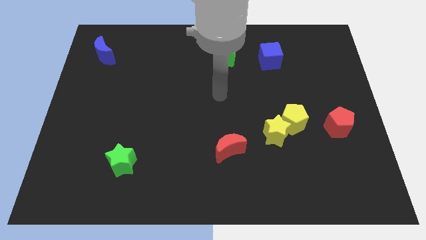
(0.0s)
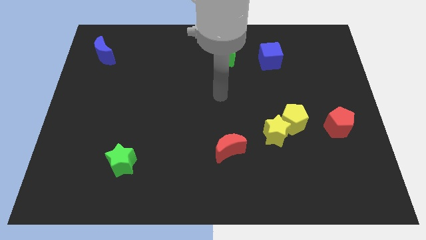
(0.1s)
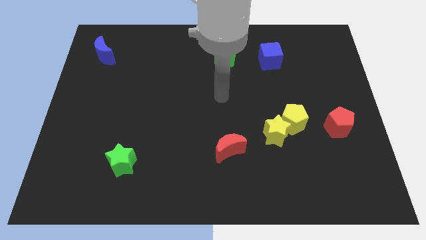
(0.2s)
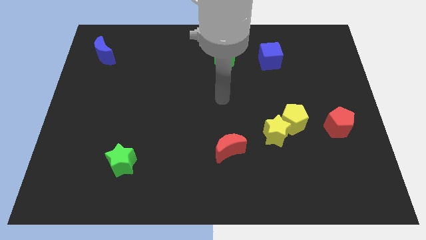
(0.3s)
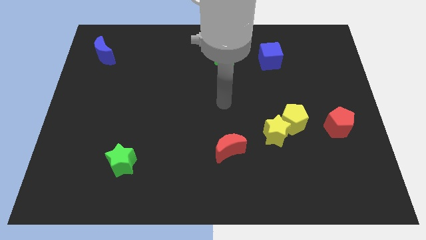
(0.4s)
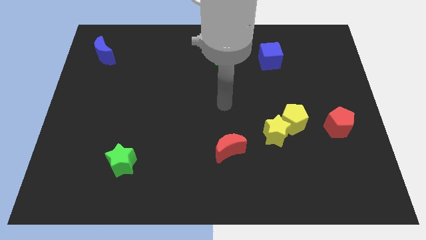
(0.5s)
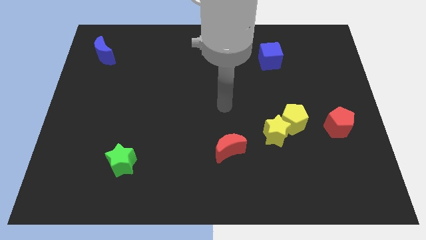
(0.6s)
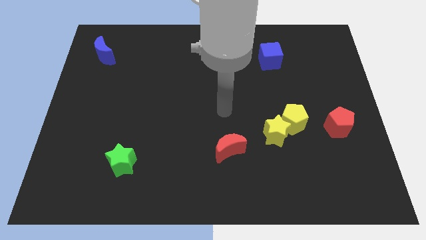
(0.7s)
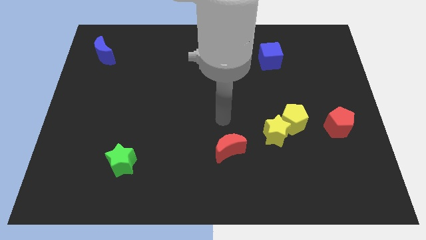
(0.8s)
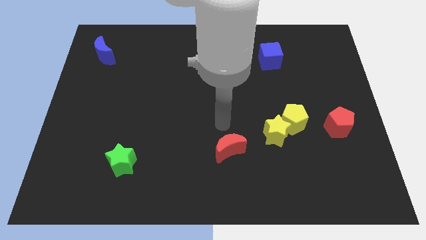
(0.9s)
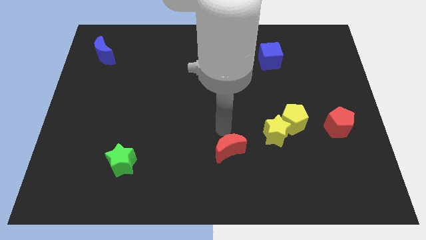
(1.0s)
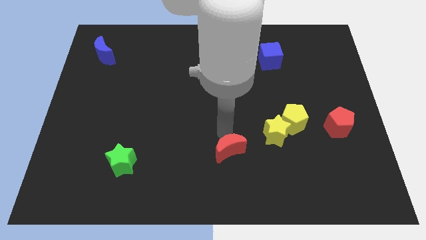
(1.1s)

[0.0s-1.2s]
move your arm towards red crescent

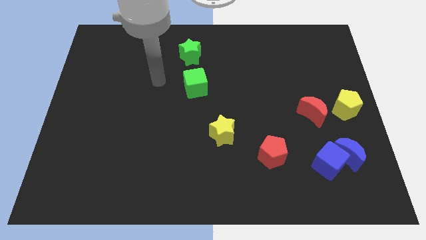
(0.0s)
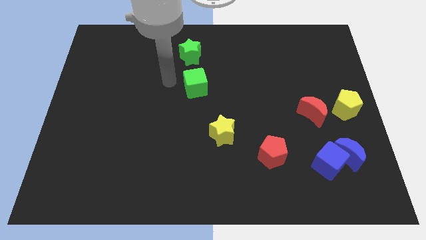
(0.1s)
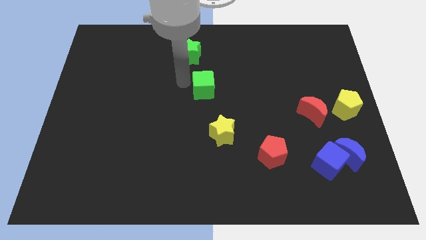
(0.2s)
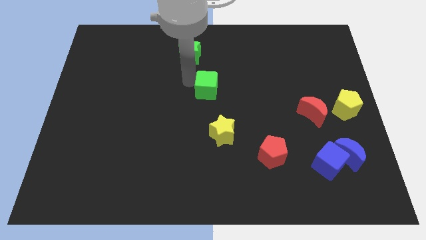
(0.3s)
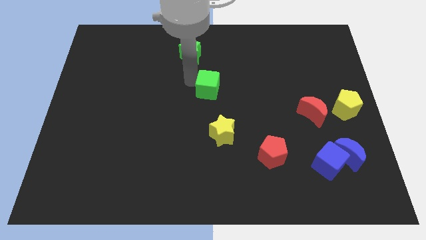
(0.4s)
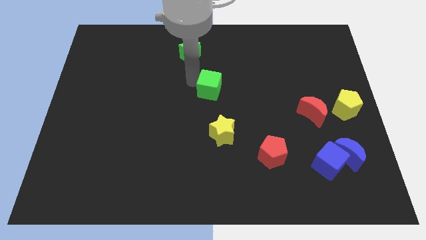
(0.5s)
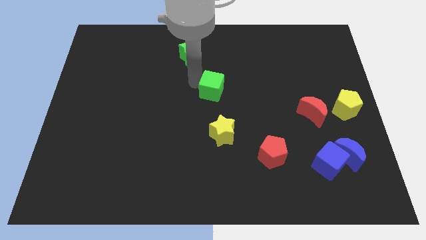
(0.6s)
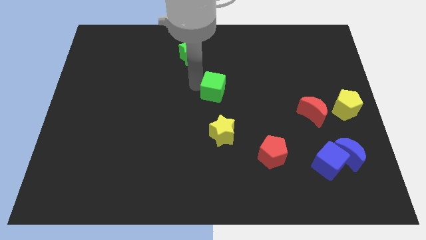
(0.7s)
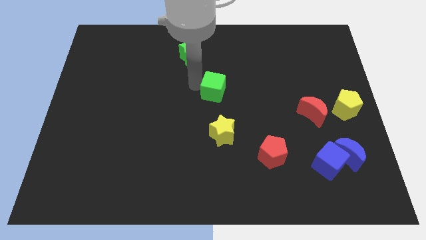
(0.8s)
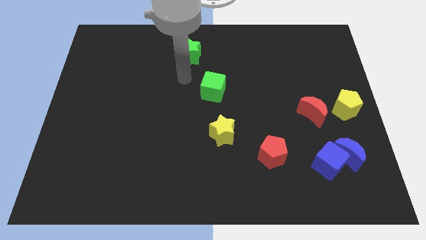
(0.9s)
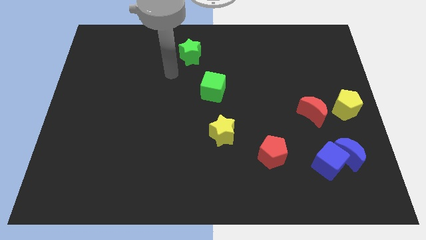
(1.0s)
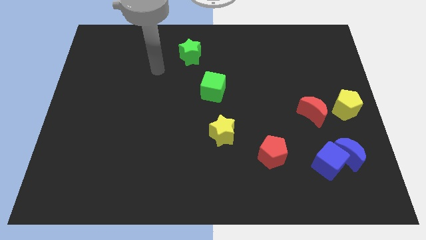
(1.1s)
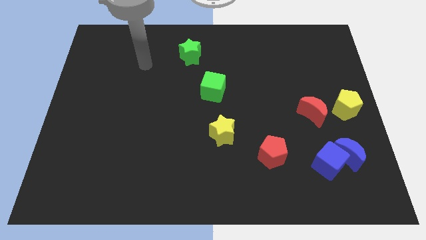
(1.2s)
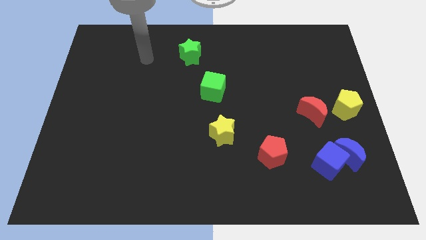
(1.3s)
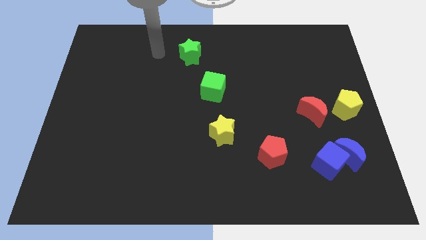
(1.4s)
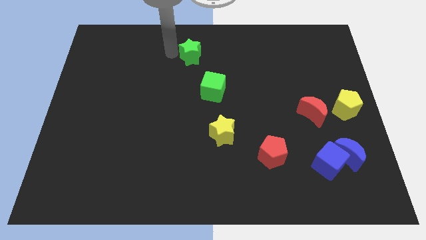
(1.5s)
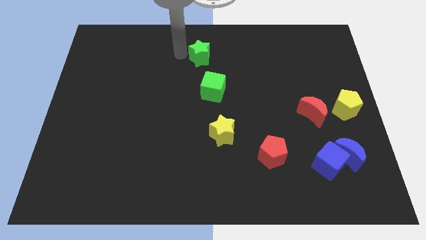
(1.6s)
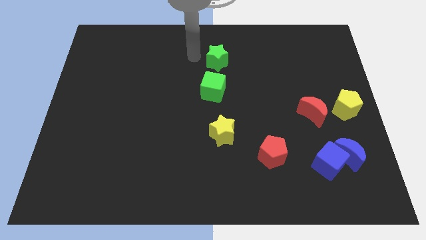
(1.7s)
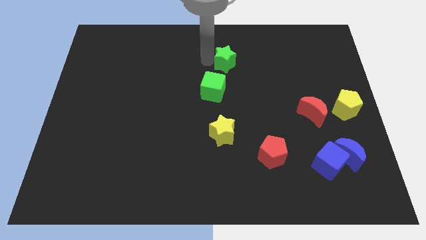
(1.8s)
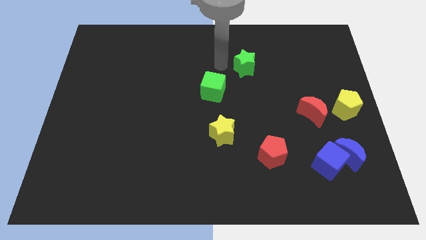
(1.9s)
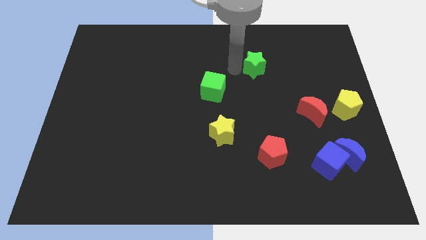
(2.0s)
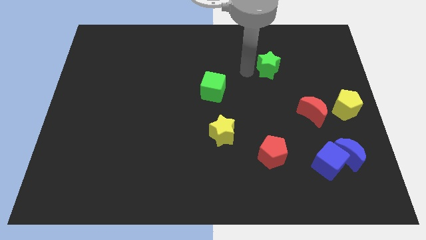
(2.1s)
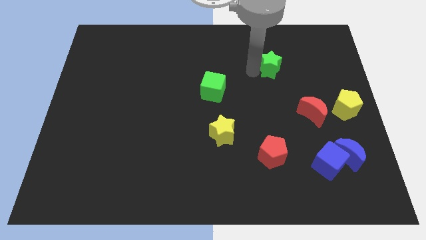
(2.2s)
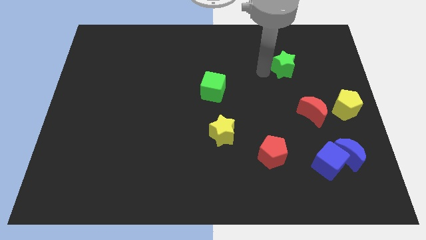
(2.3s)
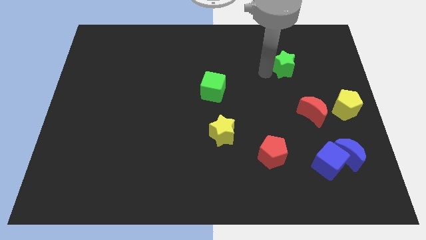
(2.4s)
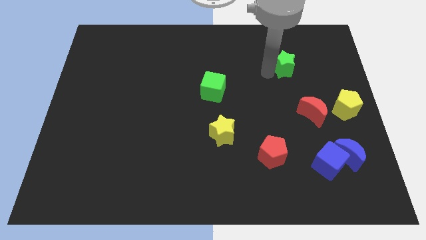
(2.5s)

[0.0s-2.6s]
move the green star towards the right

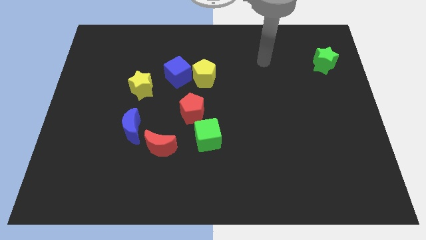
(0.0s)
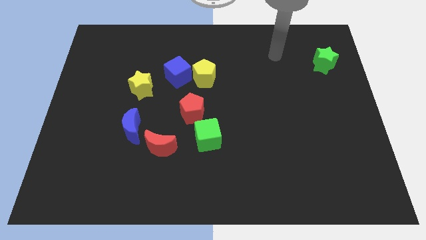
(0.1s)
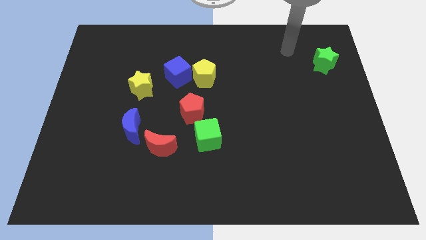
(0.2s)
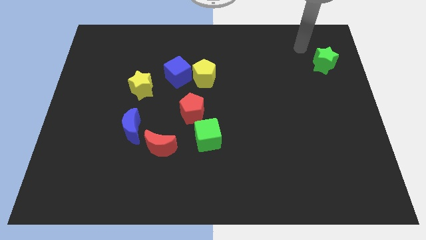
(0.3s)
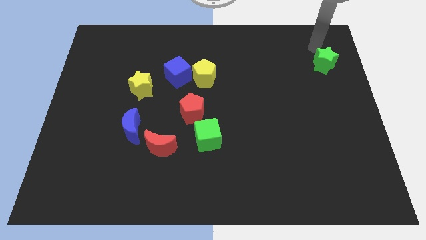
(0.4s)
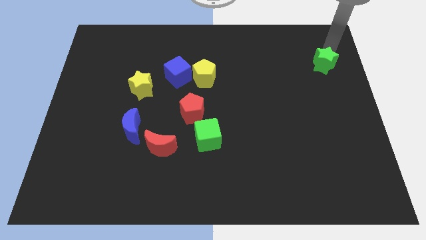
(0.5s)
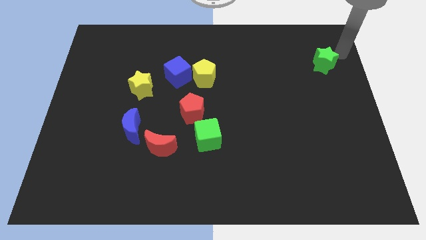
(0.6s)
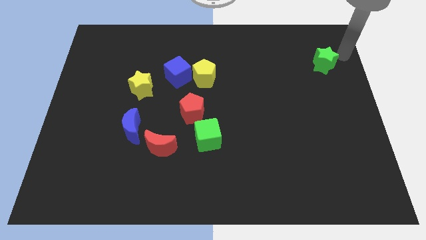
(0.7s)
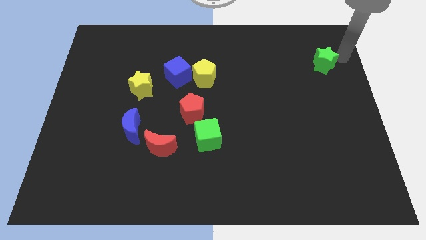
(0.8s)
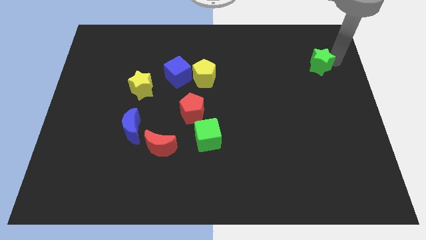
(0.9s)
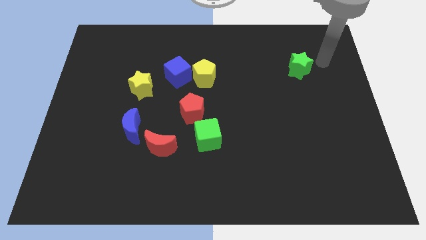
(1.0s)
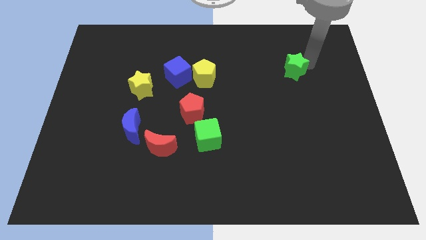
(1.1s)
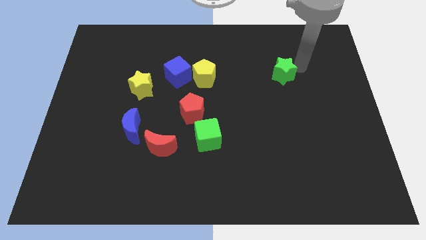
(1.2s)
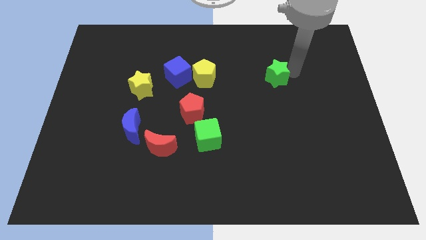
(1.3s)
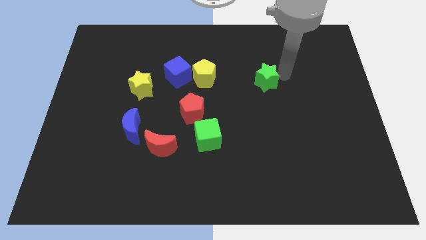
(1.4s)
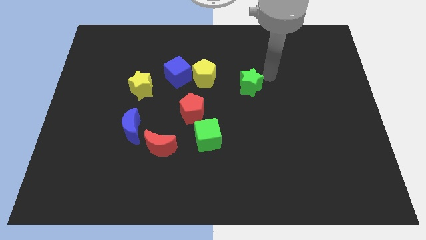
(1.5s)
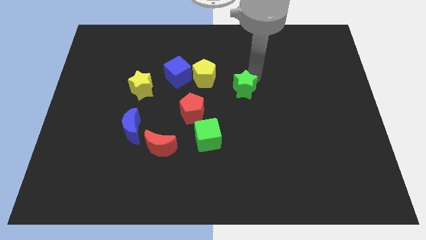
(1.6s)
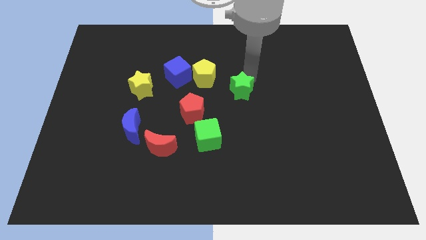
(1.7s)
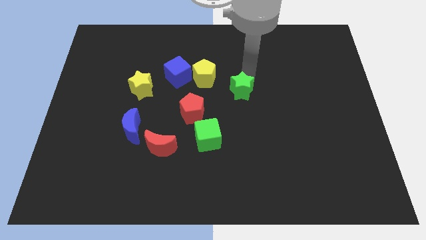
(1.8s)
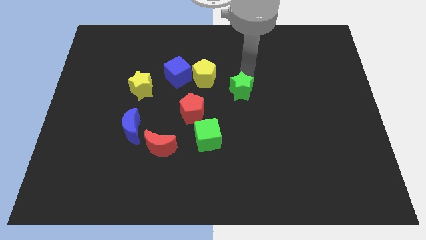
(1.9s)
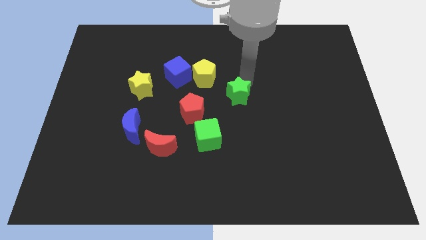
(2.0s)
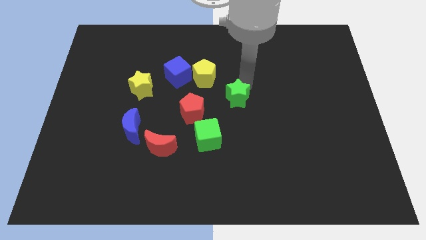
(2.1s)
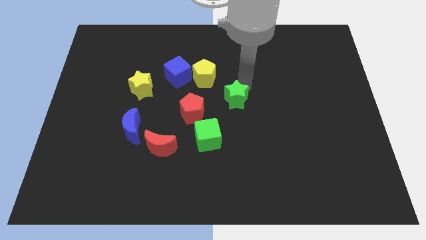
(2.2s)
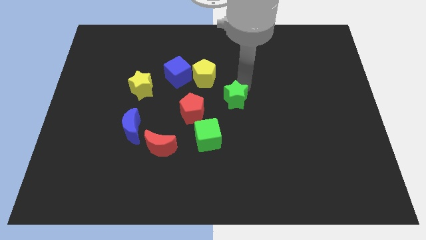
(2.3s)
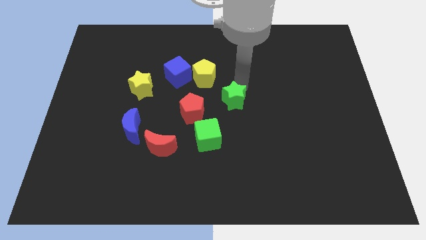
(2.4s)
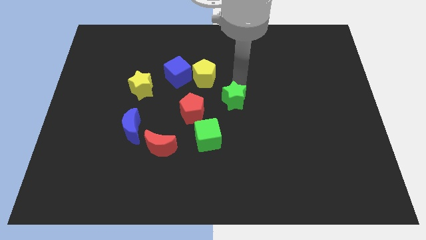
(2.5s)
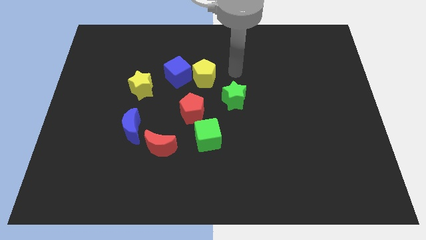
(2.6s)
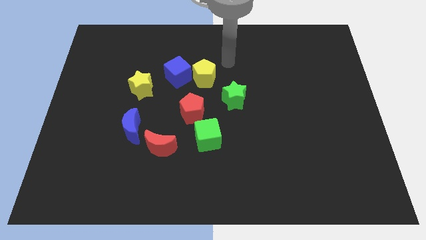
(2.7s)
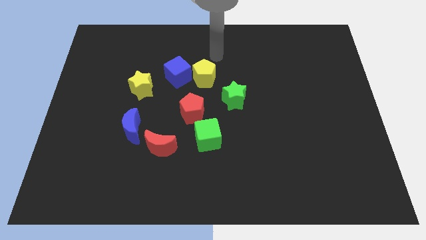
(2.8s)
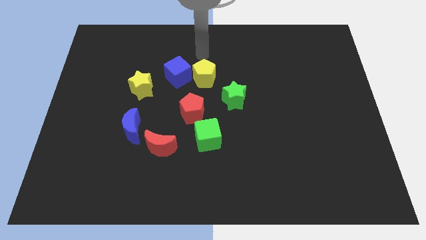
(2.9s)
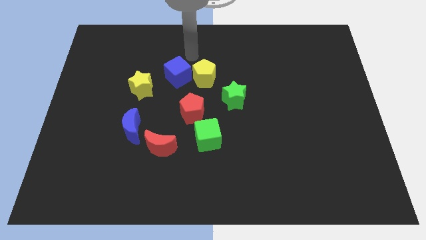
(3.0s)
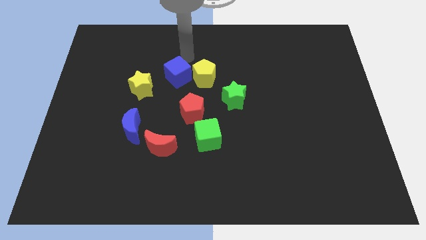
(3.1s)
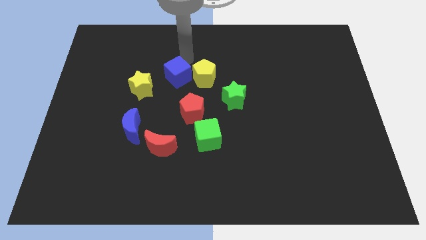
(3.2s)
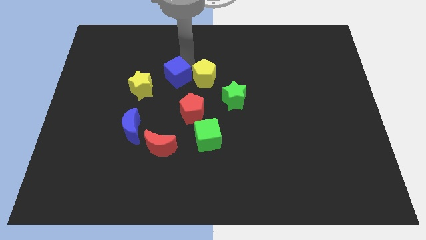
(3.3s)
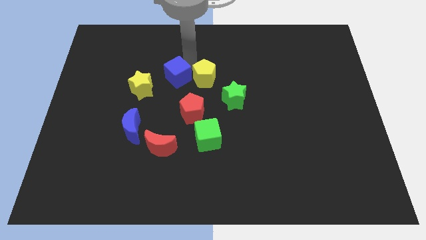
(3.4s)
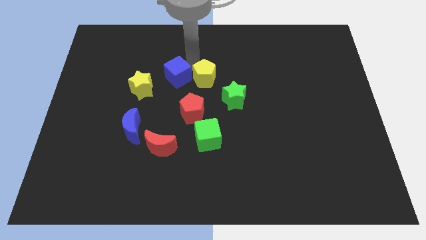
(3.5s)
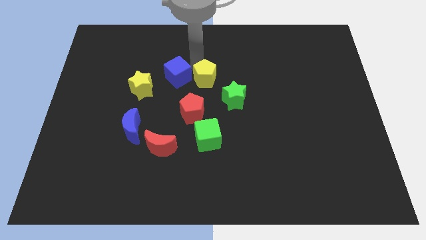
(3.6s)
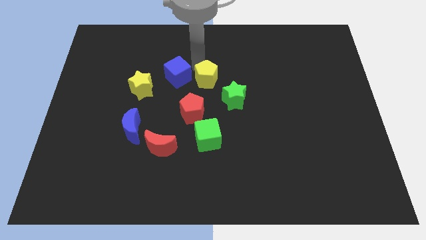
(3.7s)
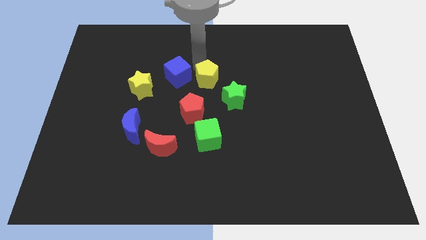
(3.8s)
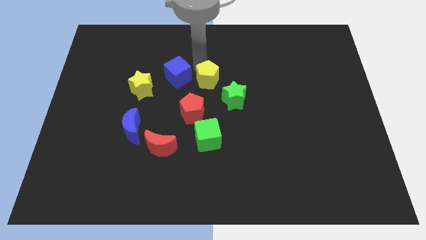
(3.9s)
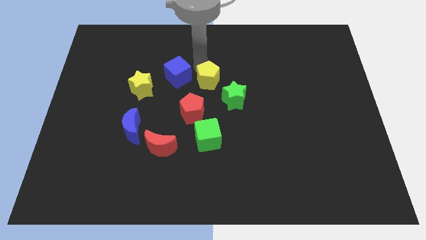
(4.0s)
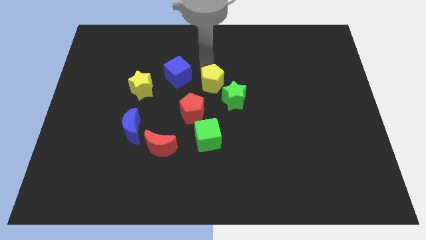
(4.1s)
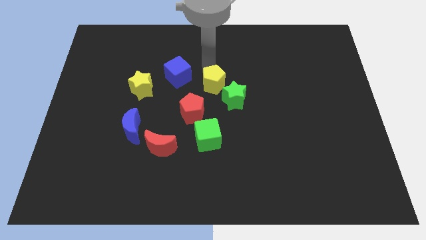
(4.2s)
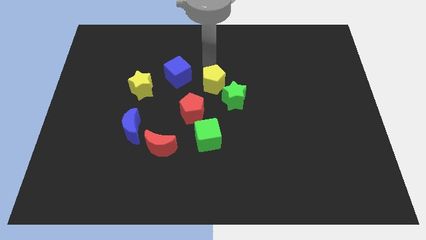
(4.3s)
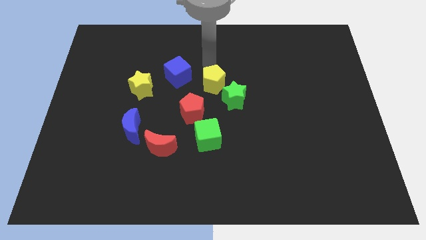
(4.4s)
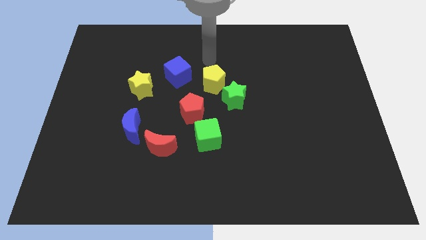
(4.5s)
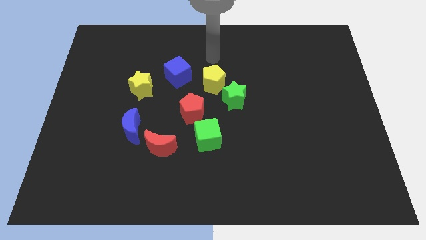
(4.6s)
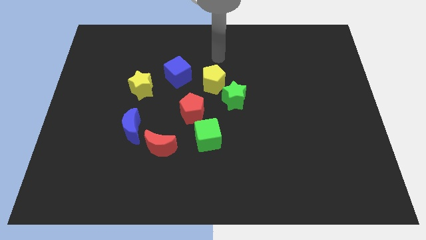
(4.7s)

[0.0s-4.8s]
move the green star and the yellow pentagon close to each other

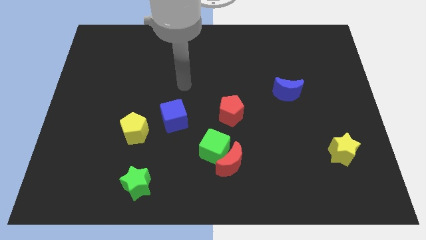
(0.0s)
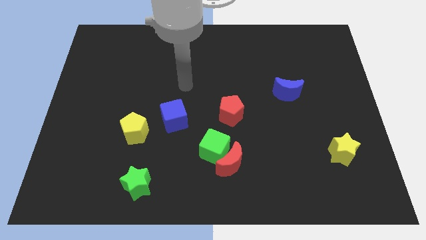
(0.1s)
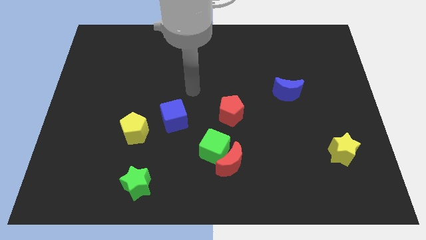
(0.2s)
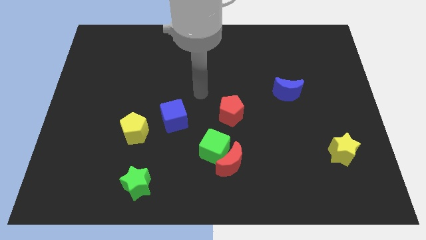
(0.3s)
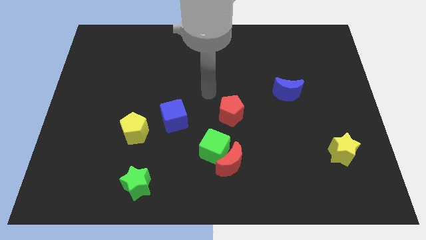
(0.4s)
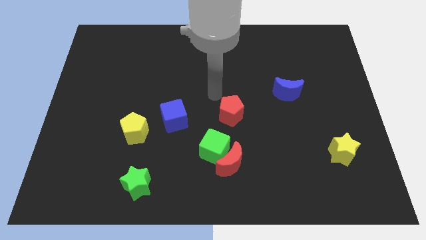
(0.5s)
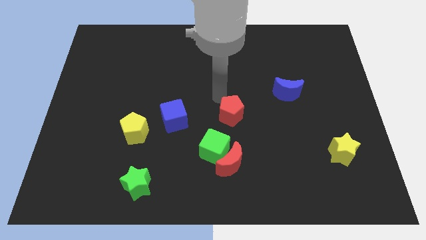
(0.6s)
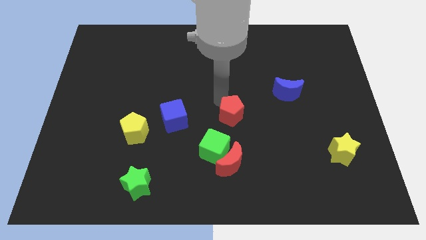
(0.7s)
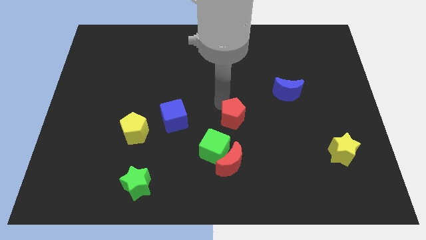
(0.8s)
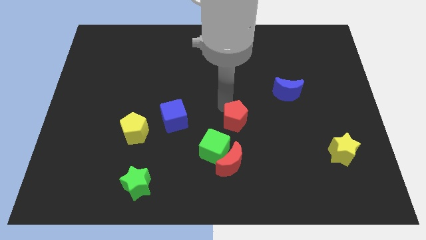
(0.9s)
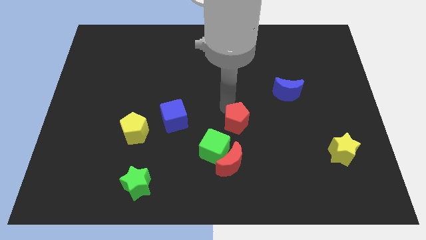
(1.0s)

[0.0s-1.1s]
push the red pentagon slightly to the bottom
